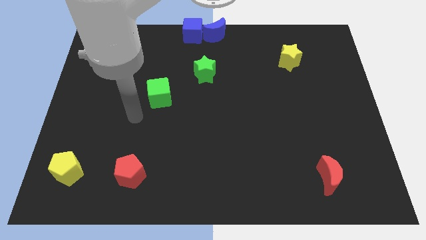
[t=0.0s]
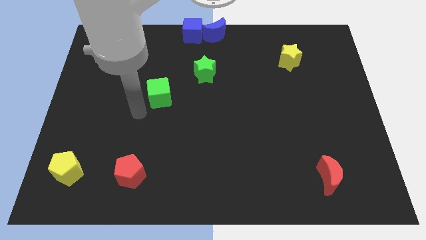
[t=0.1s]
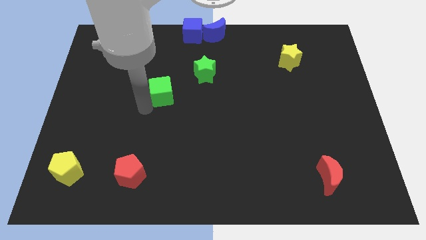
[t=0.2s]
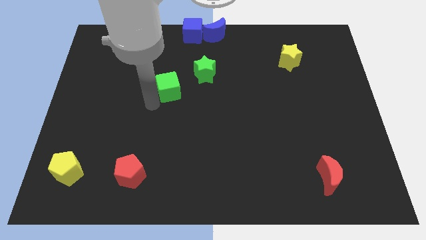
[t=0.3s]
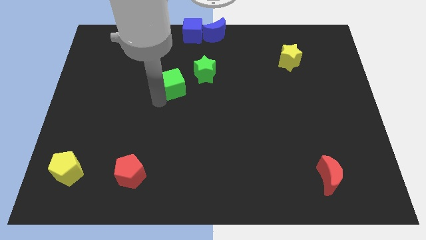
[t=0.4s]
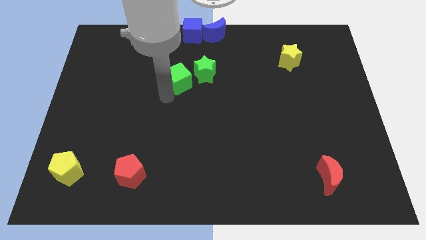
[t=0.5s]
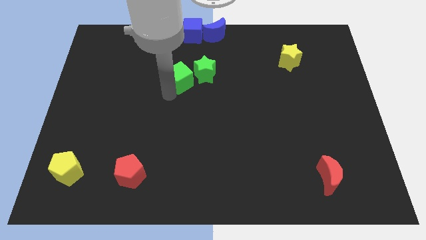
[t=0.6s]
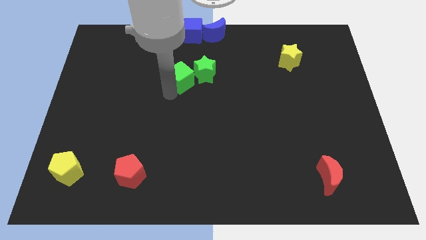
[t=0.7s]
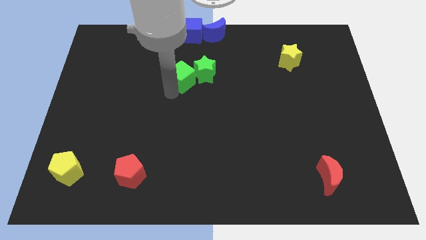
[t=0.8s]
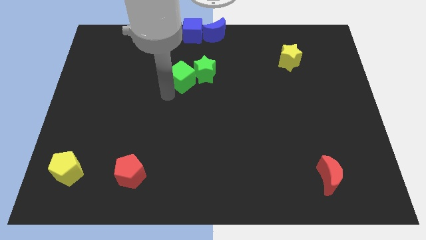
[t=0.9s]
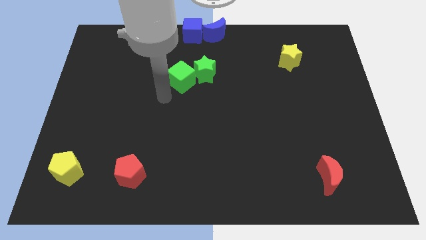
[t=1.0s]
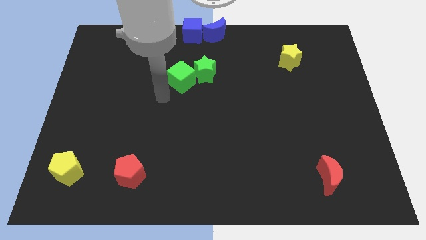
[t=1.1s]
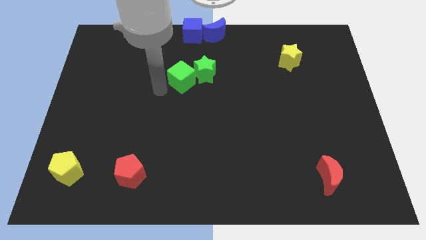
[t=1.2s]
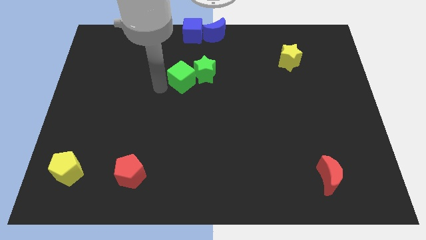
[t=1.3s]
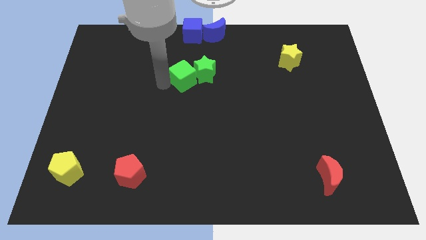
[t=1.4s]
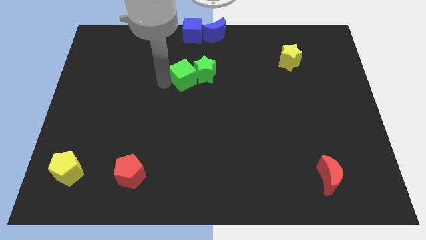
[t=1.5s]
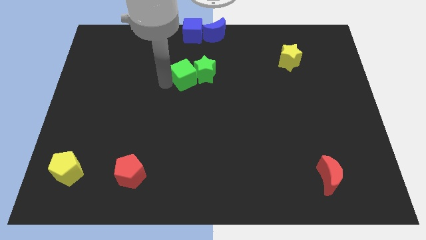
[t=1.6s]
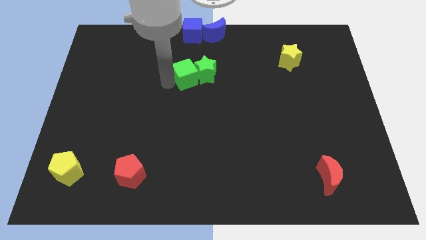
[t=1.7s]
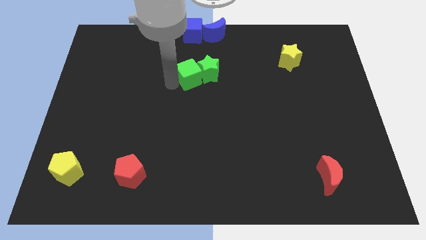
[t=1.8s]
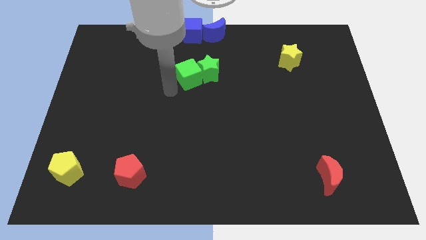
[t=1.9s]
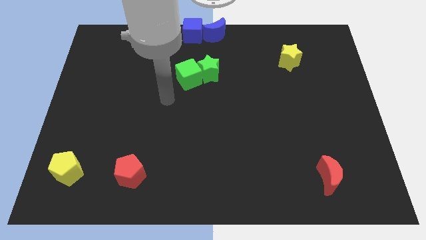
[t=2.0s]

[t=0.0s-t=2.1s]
place green cube below blue cube

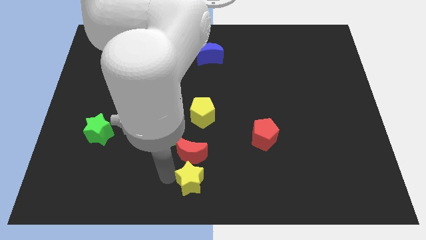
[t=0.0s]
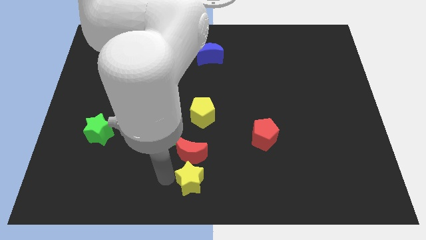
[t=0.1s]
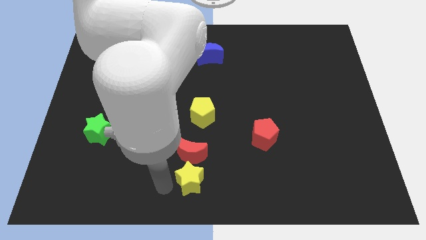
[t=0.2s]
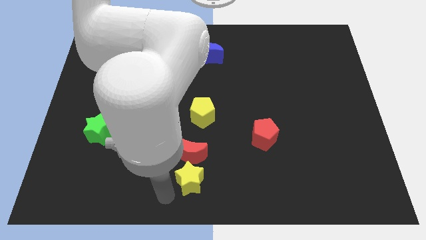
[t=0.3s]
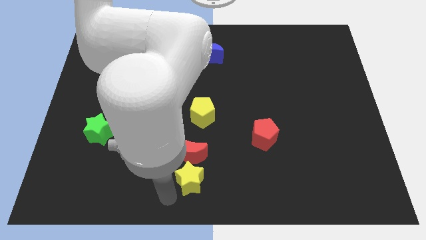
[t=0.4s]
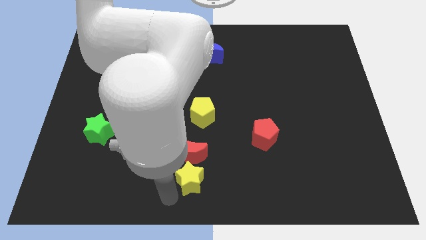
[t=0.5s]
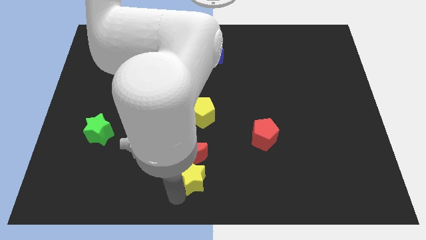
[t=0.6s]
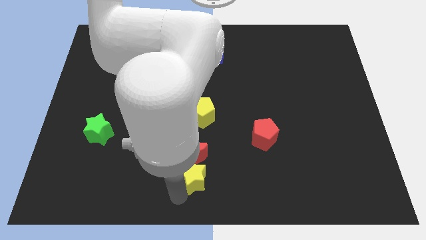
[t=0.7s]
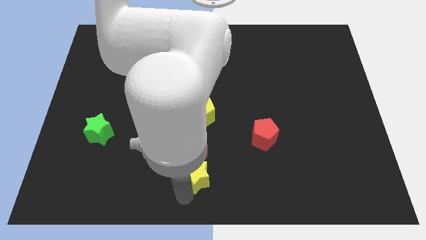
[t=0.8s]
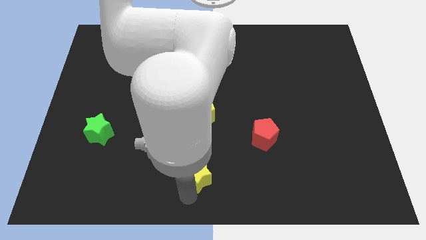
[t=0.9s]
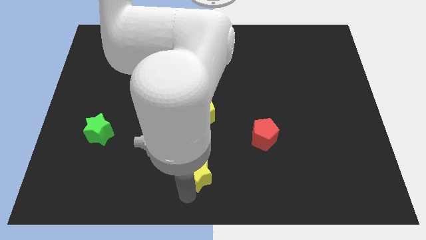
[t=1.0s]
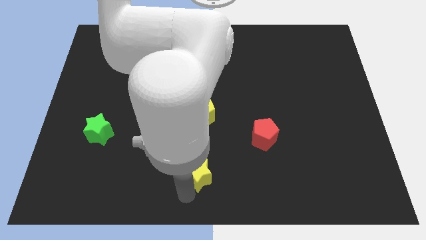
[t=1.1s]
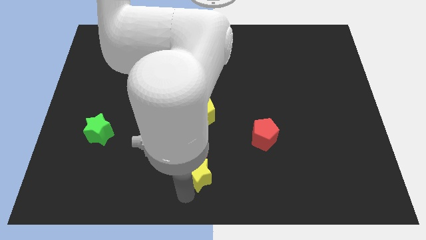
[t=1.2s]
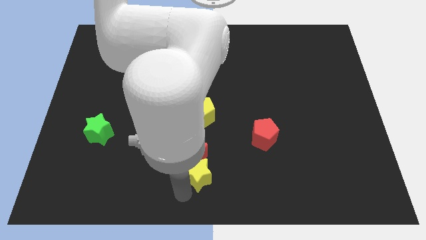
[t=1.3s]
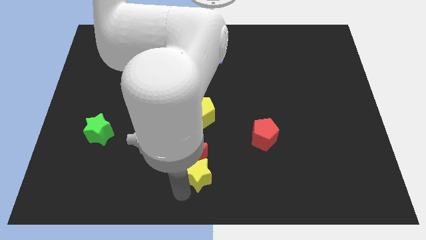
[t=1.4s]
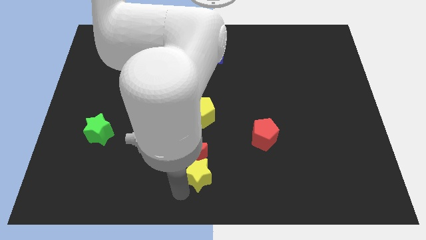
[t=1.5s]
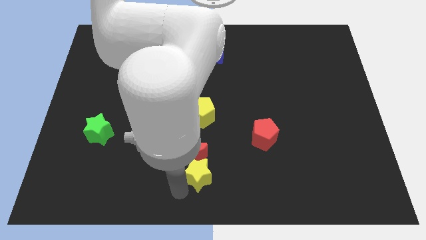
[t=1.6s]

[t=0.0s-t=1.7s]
push the yellow star to the bottom right side of the red crescent

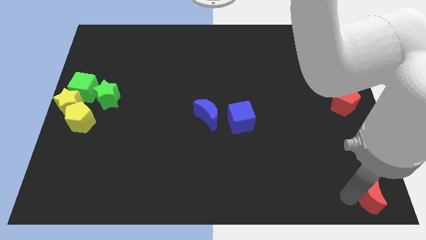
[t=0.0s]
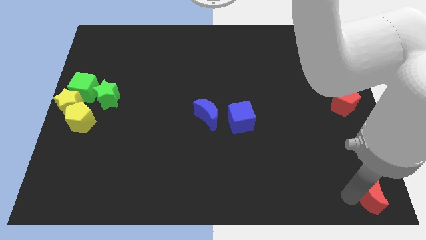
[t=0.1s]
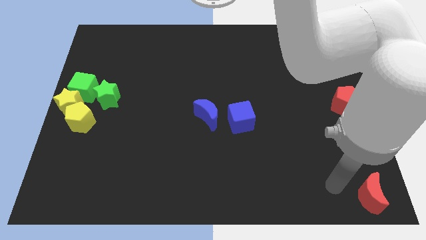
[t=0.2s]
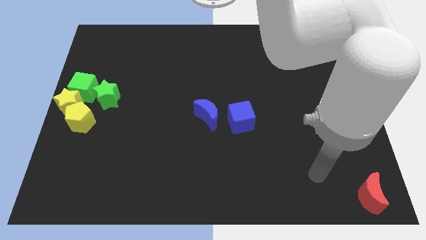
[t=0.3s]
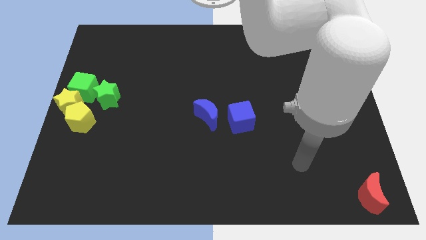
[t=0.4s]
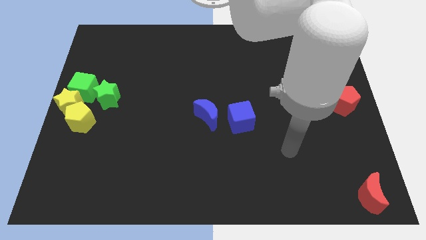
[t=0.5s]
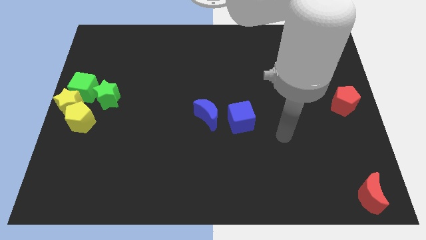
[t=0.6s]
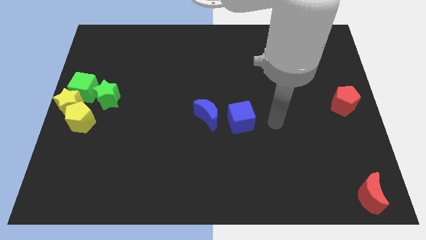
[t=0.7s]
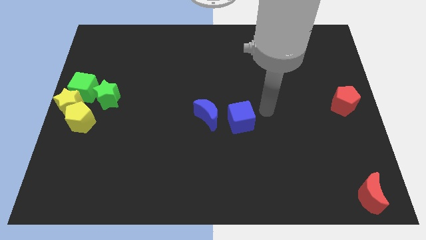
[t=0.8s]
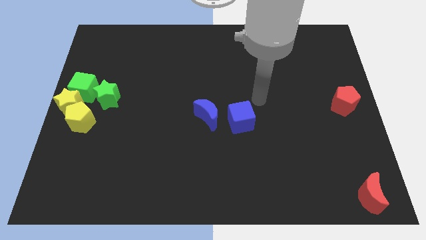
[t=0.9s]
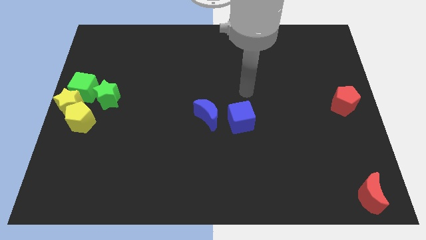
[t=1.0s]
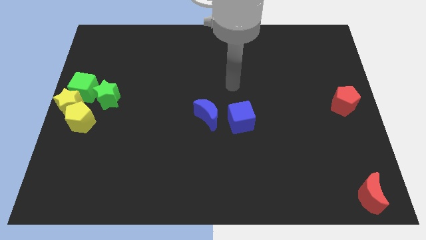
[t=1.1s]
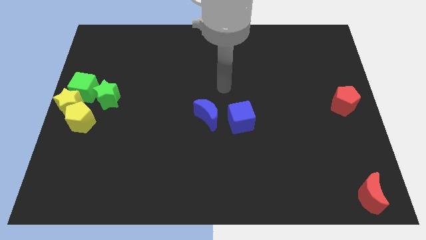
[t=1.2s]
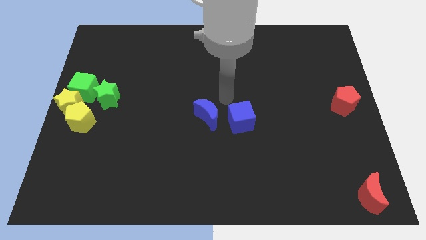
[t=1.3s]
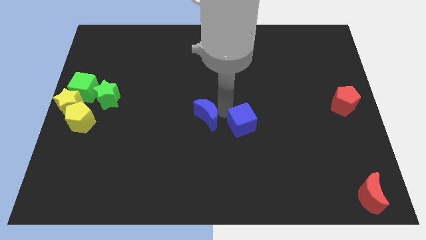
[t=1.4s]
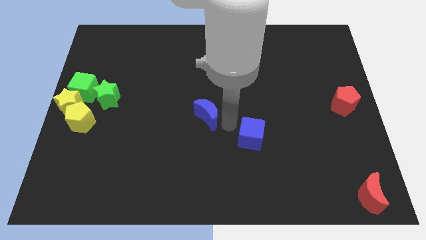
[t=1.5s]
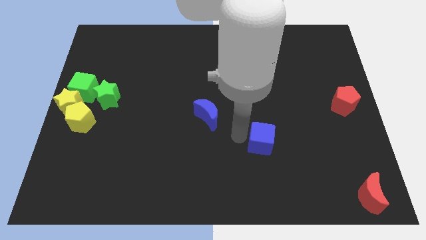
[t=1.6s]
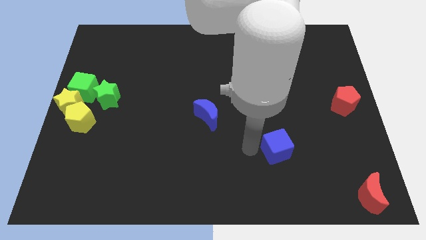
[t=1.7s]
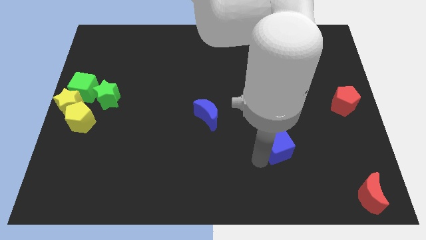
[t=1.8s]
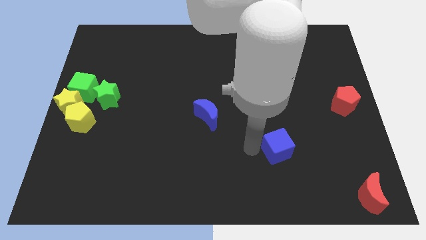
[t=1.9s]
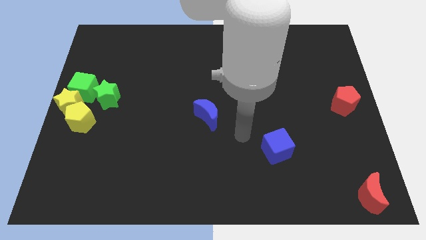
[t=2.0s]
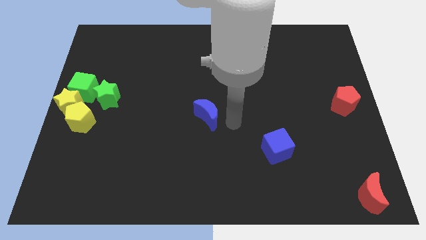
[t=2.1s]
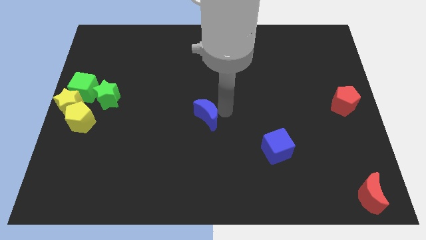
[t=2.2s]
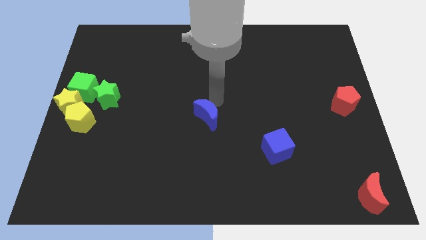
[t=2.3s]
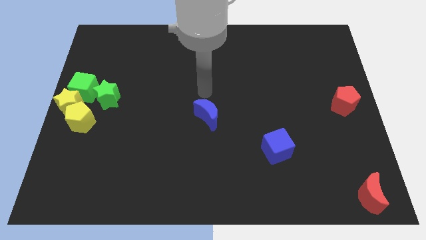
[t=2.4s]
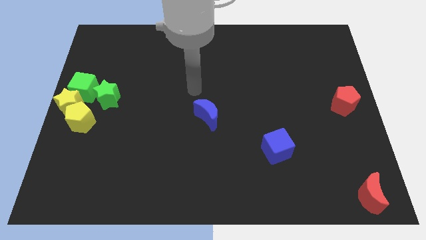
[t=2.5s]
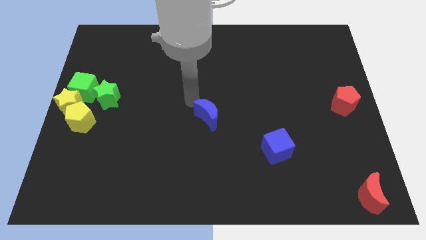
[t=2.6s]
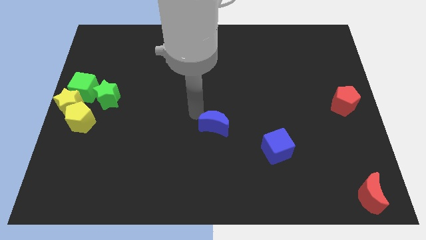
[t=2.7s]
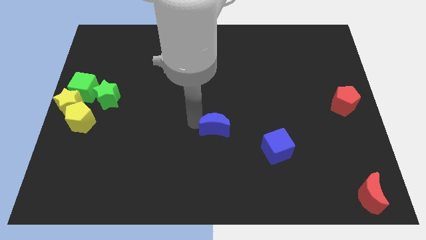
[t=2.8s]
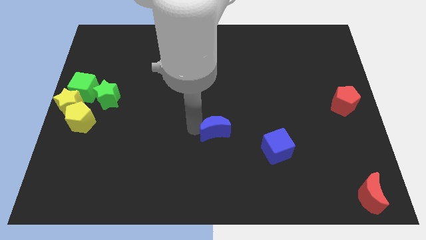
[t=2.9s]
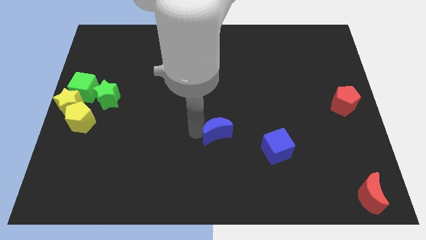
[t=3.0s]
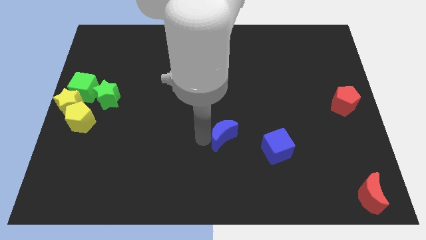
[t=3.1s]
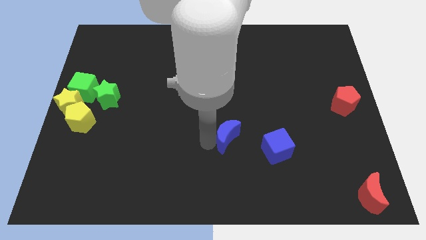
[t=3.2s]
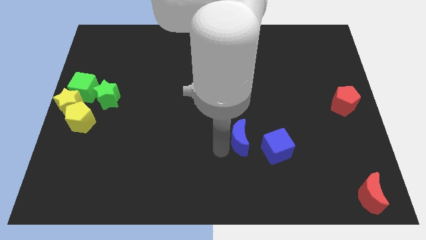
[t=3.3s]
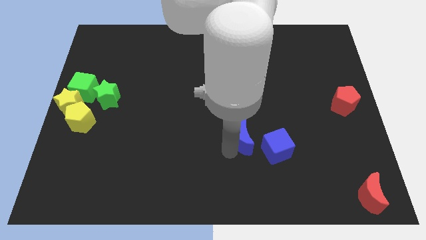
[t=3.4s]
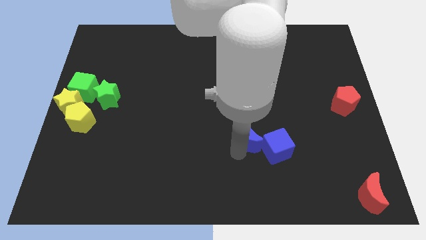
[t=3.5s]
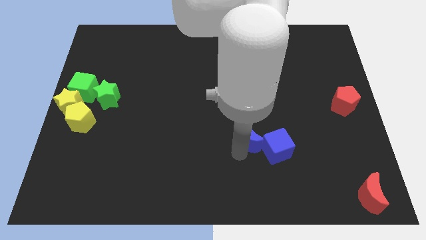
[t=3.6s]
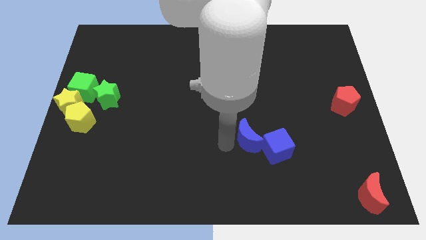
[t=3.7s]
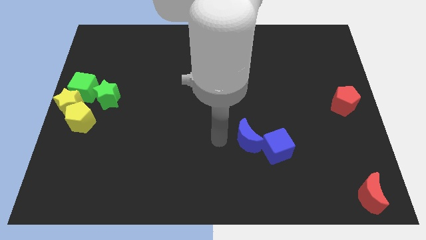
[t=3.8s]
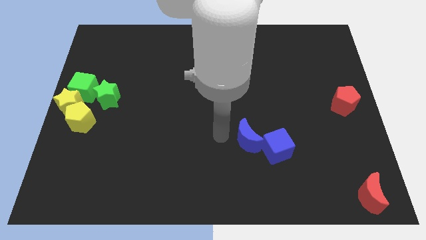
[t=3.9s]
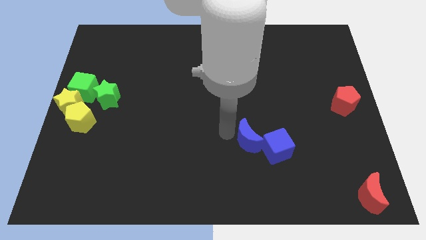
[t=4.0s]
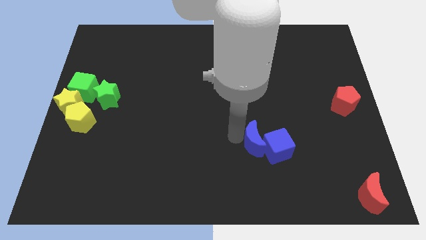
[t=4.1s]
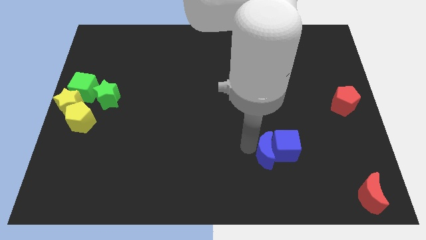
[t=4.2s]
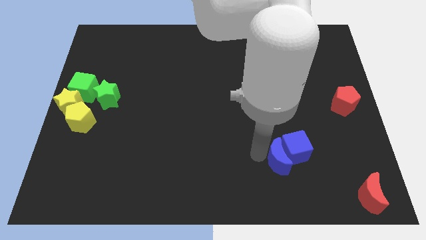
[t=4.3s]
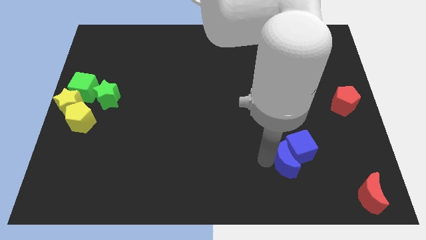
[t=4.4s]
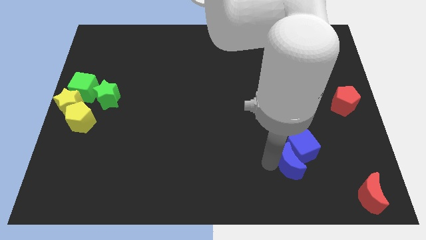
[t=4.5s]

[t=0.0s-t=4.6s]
push the blue blocks towards the red moon

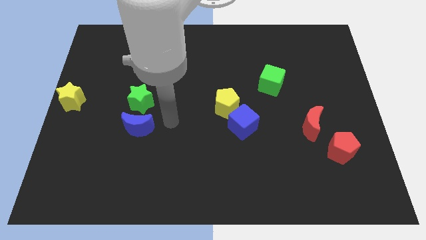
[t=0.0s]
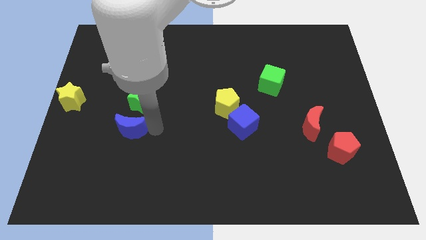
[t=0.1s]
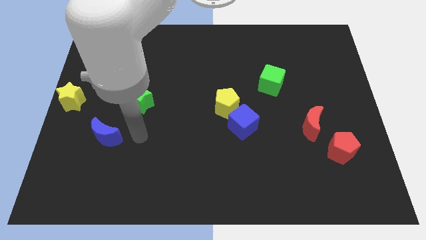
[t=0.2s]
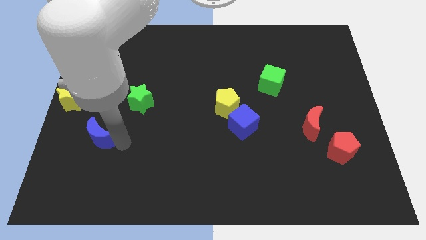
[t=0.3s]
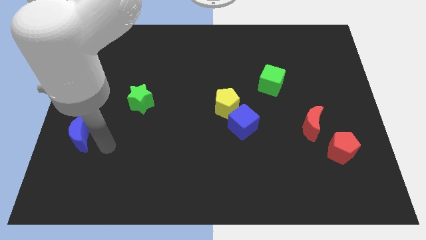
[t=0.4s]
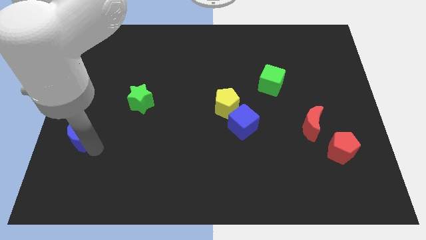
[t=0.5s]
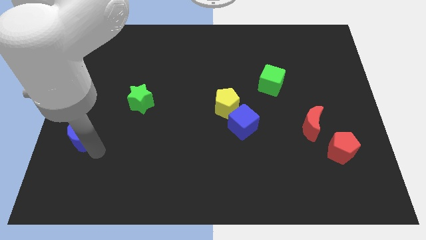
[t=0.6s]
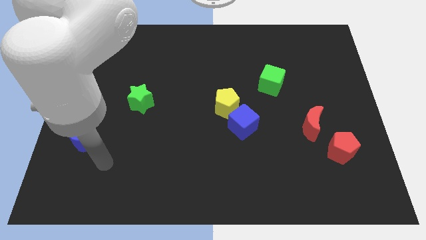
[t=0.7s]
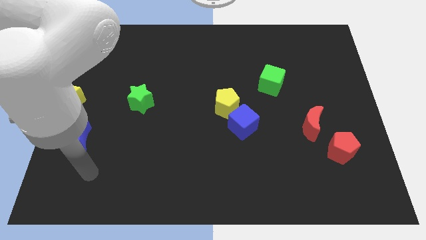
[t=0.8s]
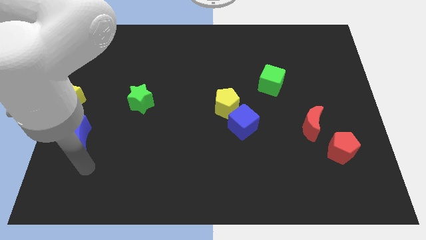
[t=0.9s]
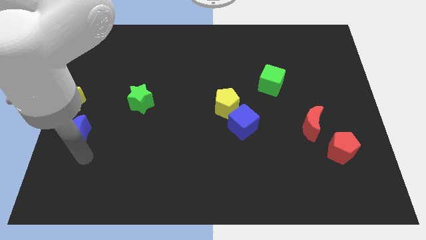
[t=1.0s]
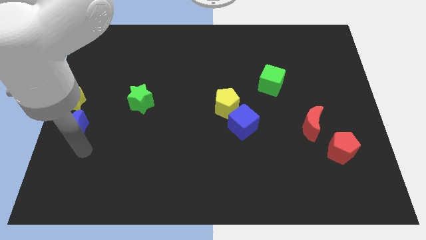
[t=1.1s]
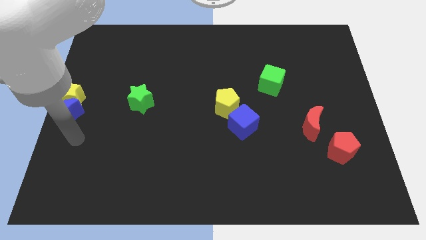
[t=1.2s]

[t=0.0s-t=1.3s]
move the blue crescent into the bottom of the yellow star
